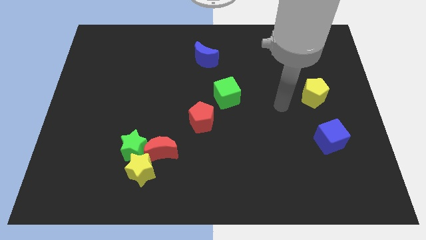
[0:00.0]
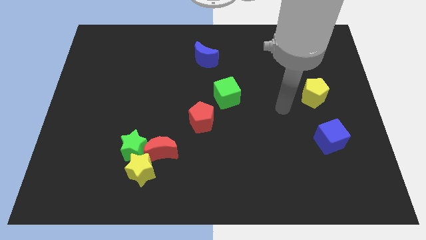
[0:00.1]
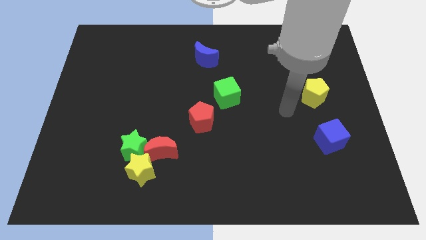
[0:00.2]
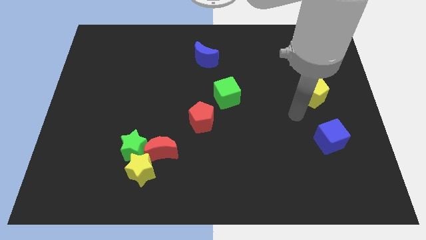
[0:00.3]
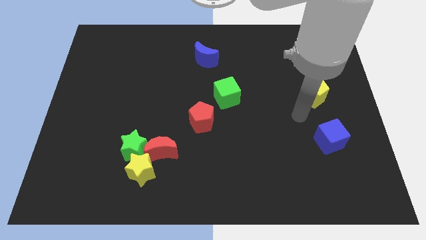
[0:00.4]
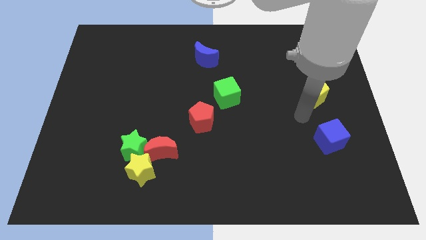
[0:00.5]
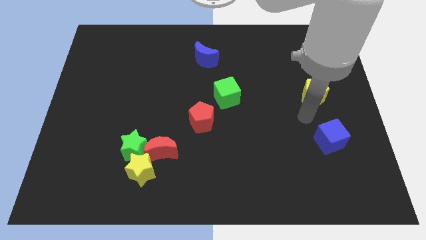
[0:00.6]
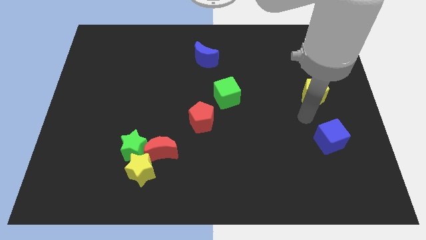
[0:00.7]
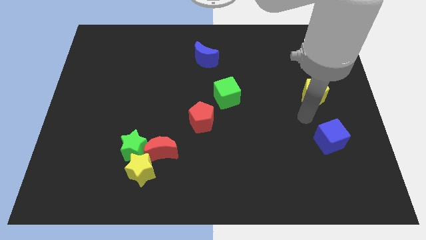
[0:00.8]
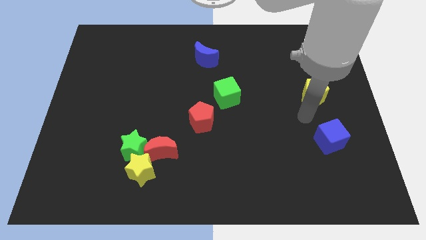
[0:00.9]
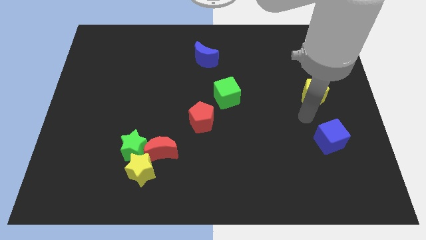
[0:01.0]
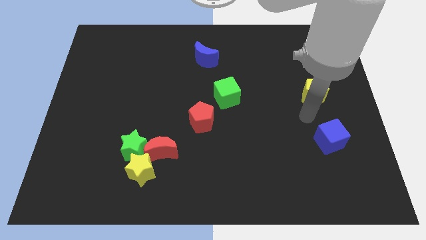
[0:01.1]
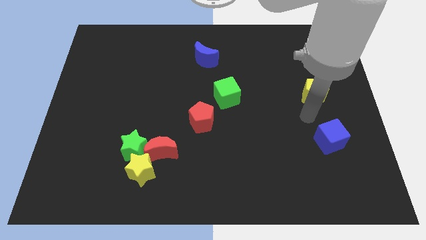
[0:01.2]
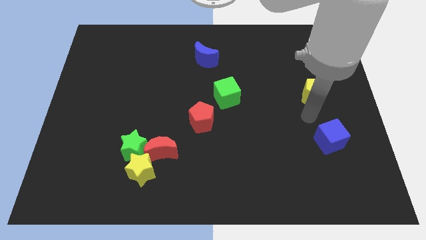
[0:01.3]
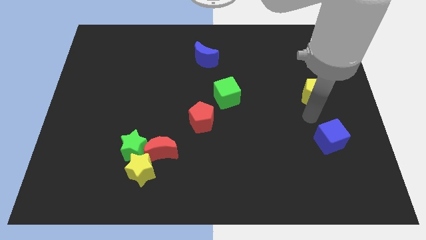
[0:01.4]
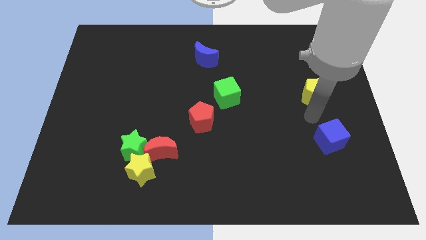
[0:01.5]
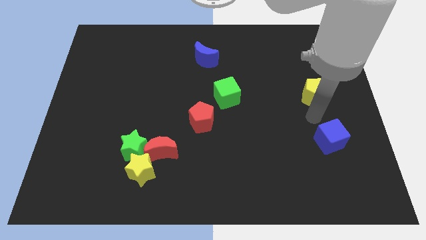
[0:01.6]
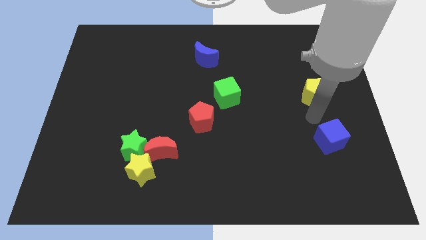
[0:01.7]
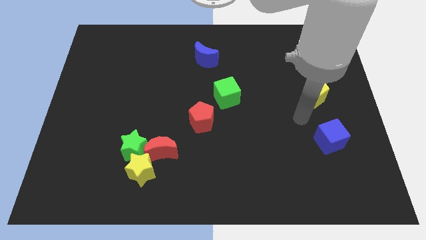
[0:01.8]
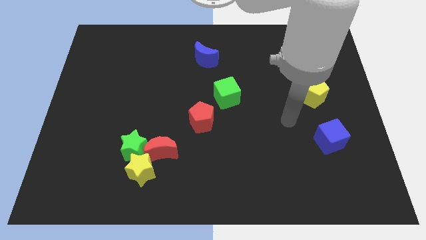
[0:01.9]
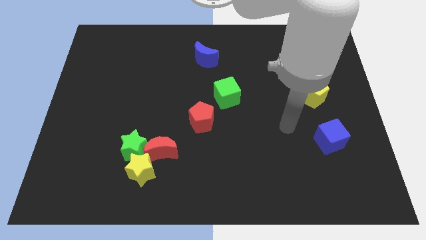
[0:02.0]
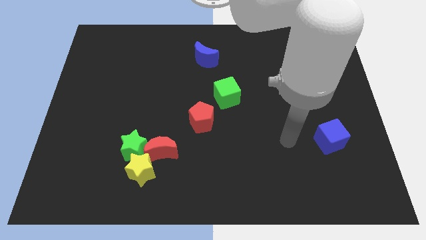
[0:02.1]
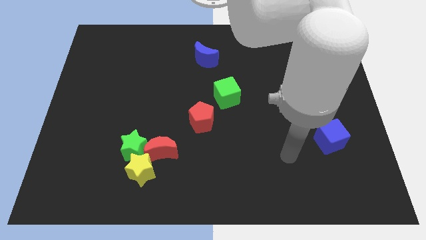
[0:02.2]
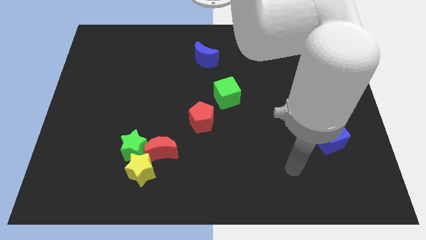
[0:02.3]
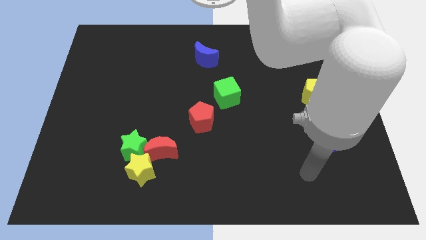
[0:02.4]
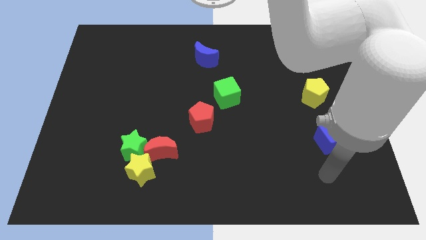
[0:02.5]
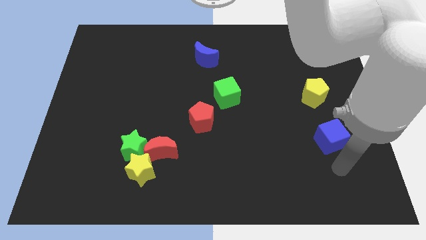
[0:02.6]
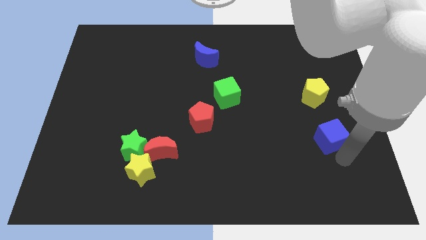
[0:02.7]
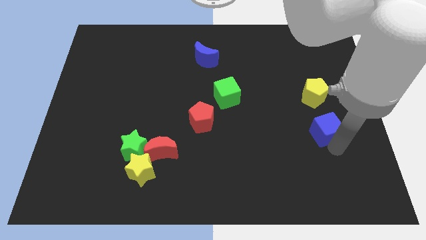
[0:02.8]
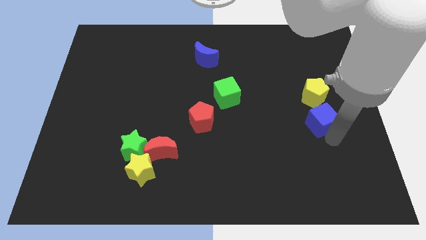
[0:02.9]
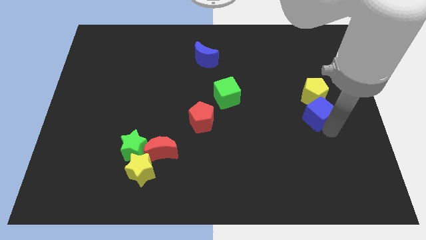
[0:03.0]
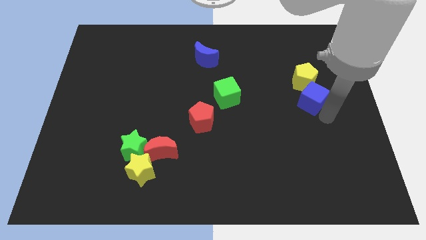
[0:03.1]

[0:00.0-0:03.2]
push the blue cube to the bottom of the yellow pentagon

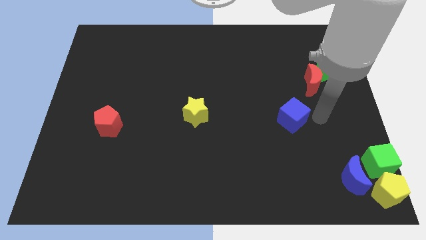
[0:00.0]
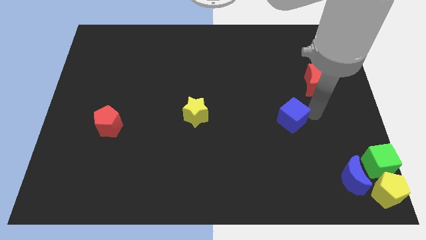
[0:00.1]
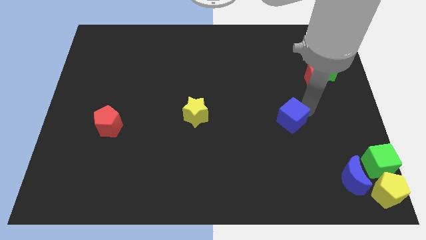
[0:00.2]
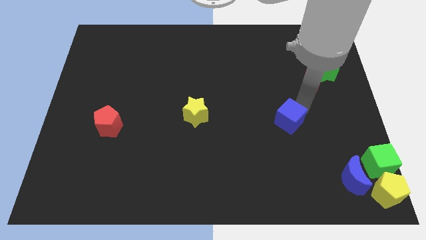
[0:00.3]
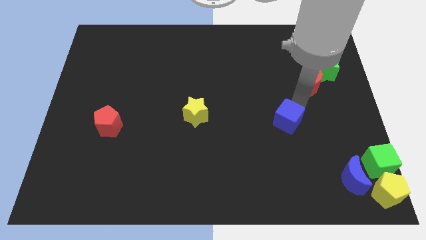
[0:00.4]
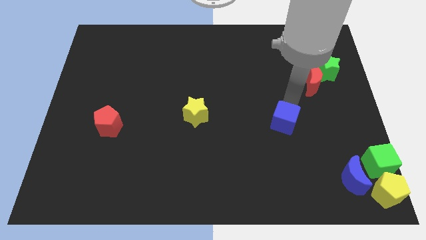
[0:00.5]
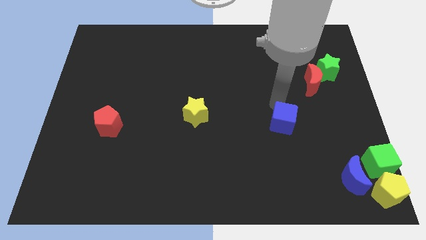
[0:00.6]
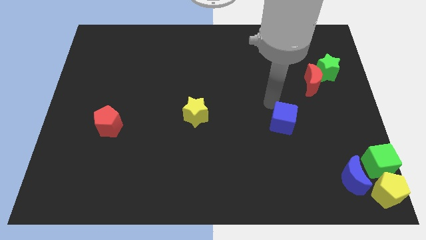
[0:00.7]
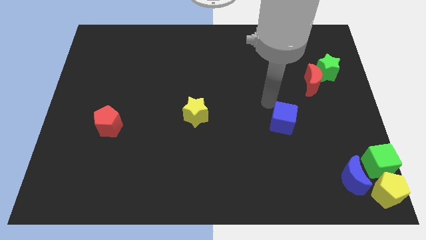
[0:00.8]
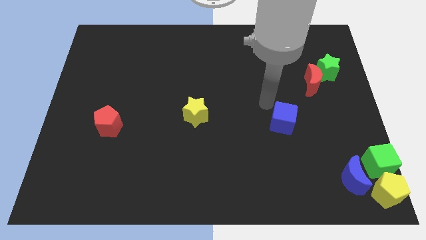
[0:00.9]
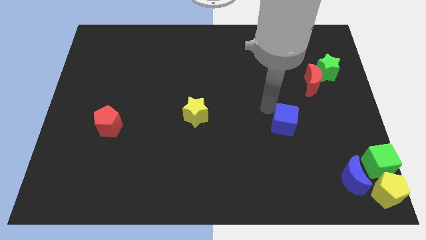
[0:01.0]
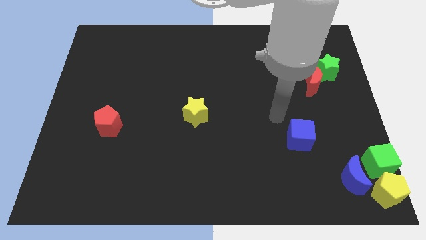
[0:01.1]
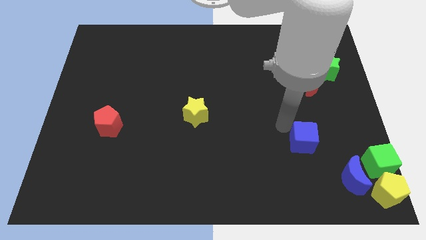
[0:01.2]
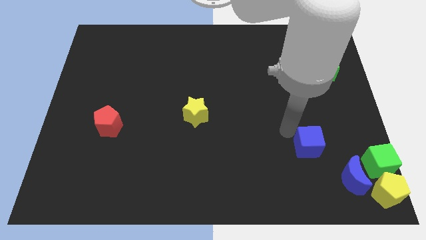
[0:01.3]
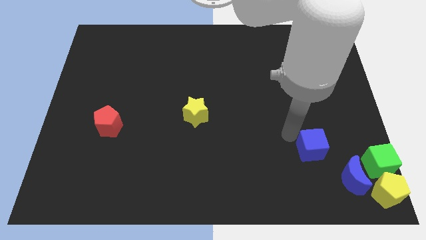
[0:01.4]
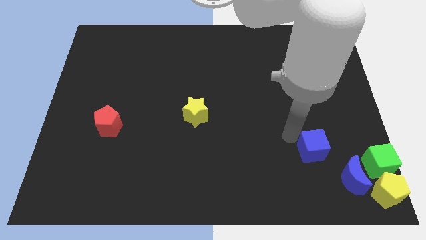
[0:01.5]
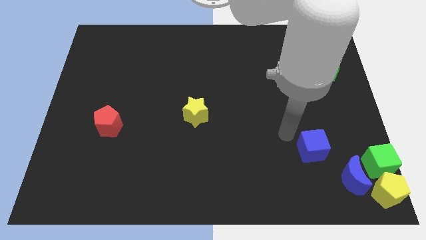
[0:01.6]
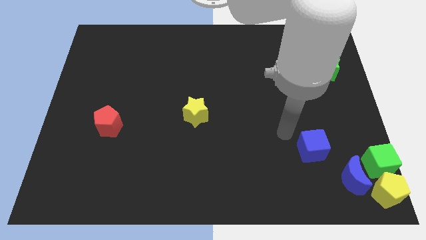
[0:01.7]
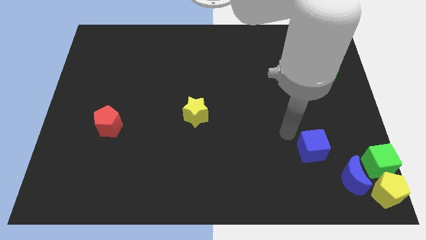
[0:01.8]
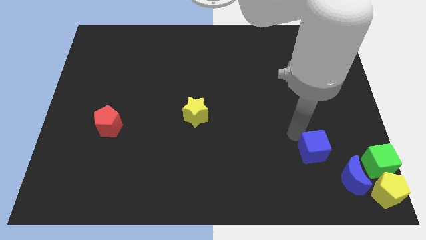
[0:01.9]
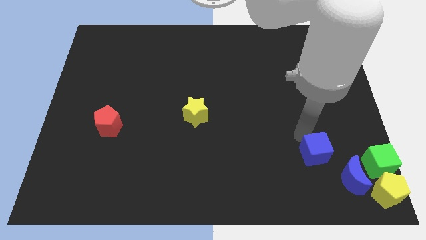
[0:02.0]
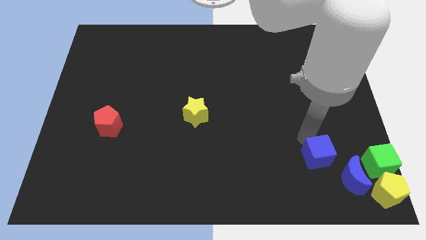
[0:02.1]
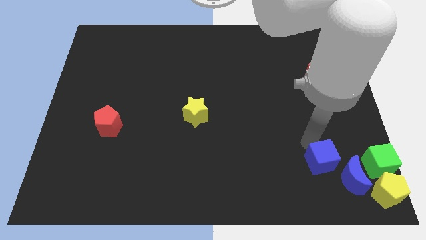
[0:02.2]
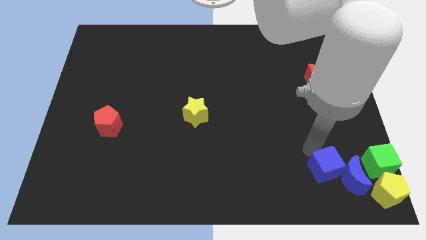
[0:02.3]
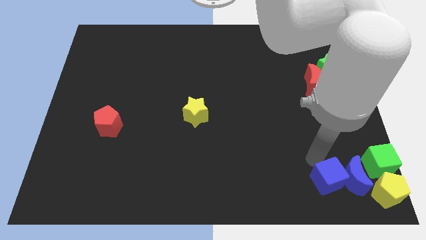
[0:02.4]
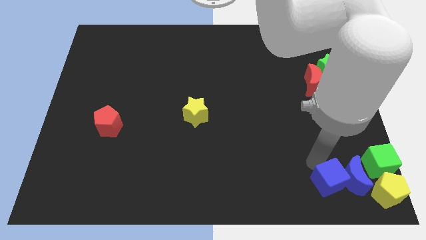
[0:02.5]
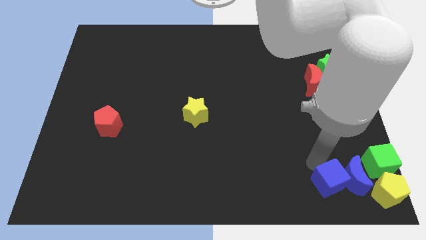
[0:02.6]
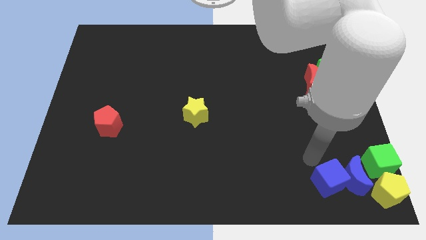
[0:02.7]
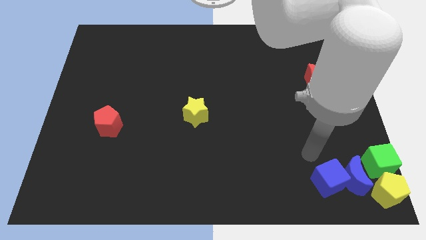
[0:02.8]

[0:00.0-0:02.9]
push the blue cube into the blue crescent

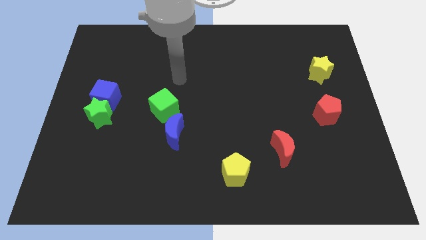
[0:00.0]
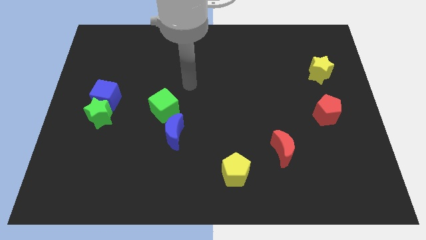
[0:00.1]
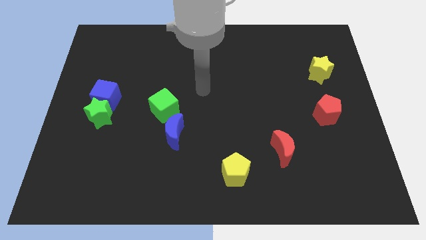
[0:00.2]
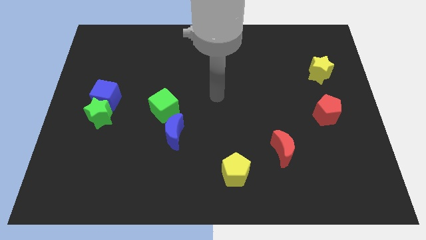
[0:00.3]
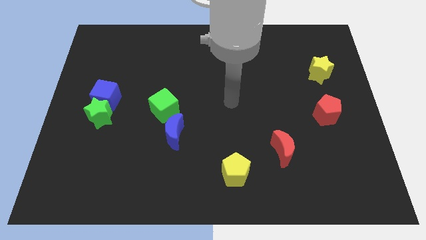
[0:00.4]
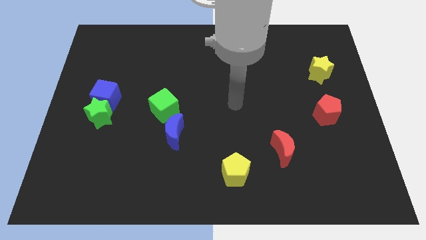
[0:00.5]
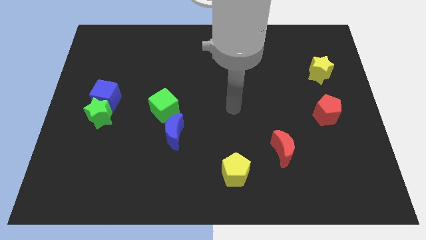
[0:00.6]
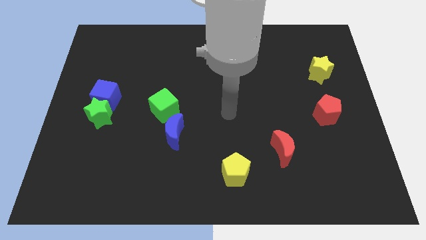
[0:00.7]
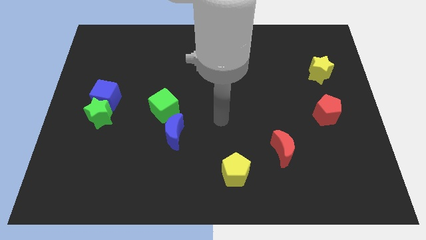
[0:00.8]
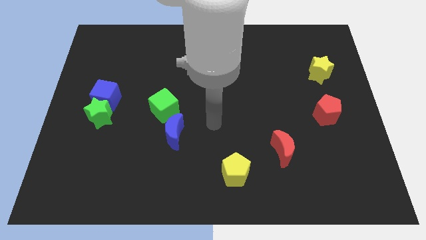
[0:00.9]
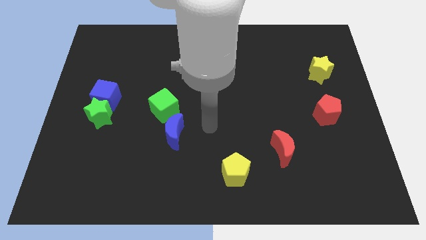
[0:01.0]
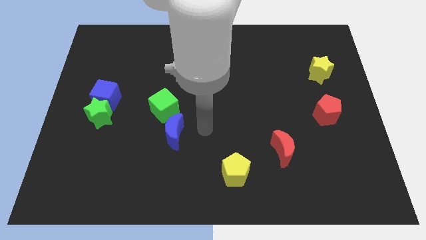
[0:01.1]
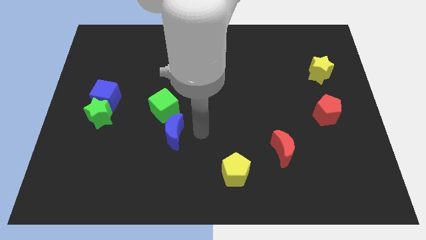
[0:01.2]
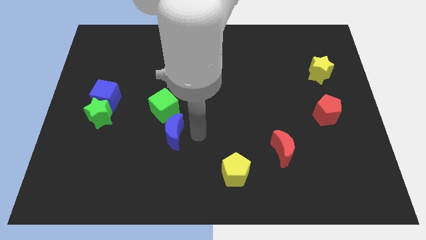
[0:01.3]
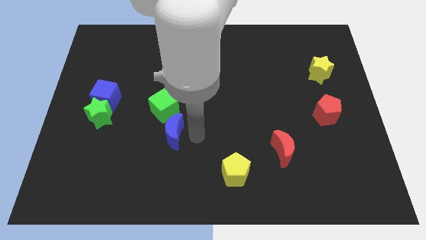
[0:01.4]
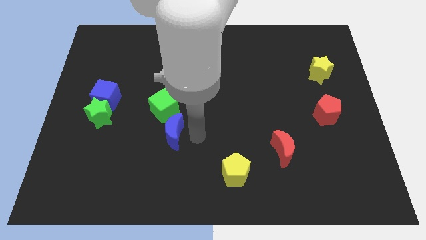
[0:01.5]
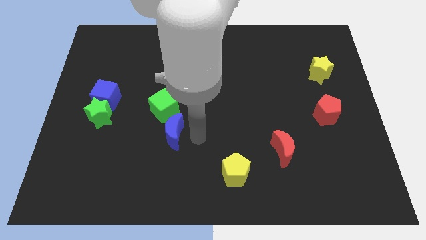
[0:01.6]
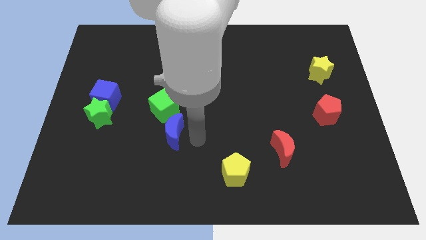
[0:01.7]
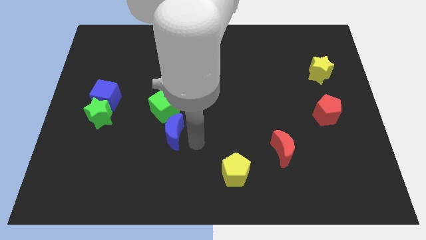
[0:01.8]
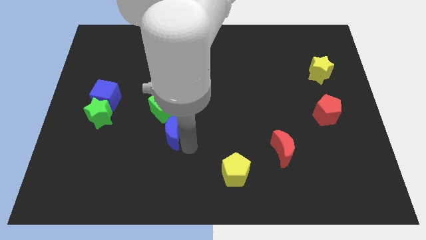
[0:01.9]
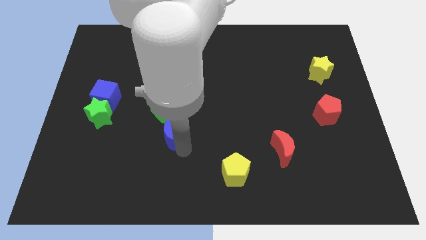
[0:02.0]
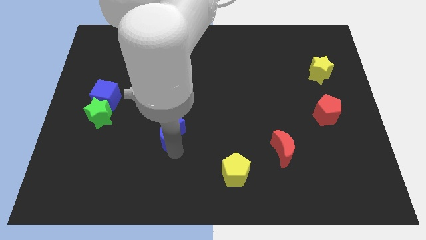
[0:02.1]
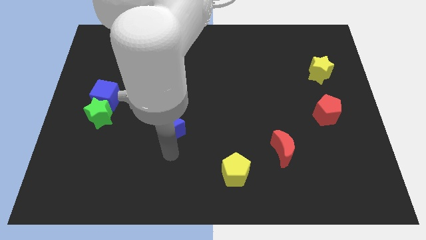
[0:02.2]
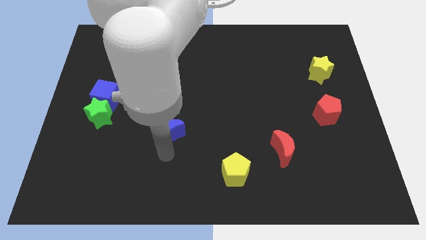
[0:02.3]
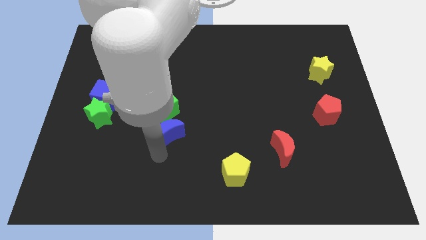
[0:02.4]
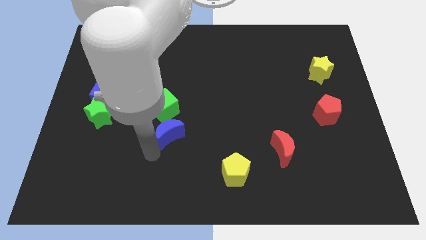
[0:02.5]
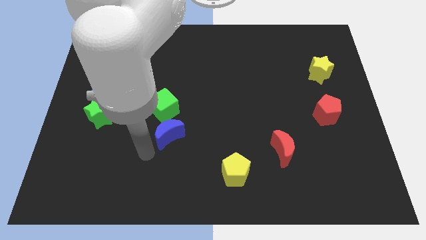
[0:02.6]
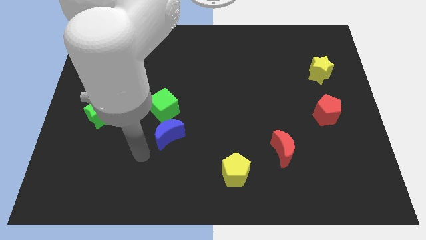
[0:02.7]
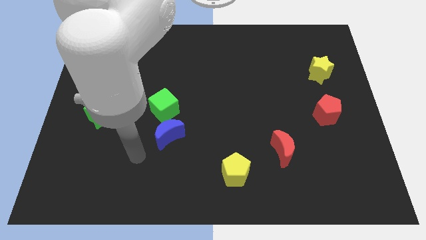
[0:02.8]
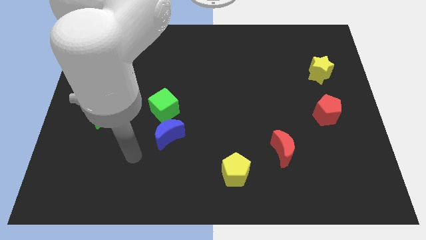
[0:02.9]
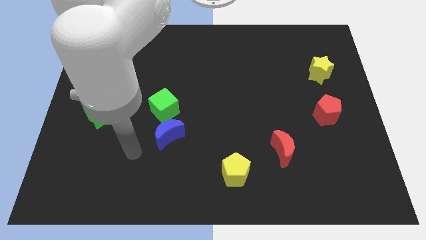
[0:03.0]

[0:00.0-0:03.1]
slide blue moon slightly to the left
